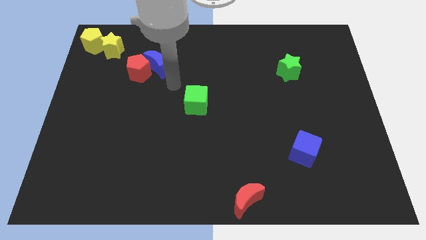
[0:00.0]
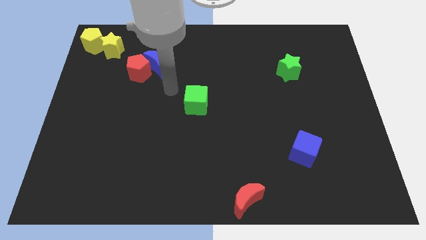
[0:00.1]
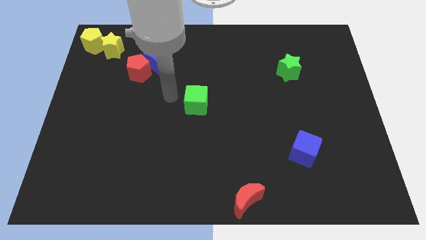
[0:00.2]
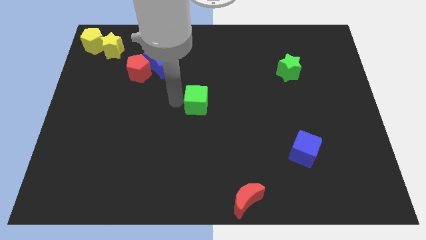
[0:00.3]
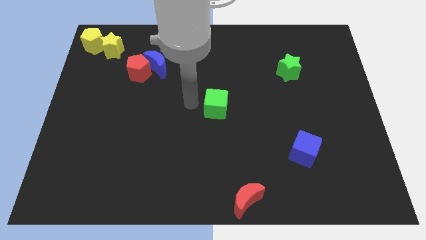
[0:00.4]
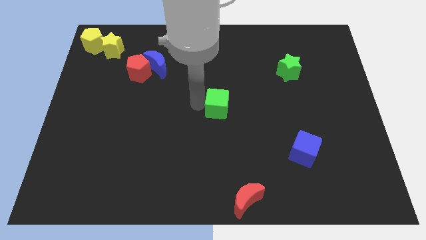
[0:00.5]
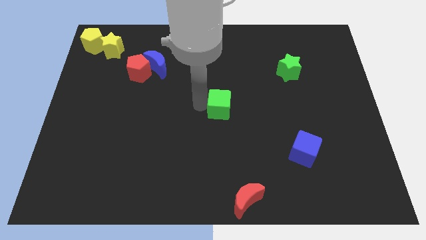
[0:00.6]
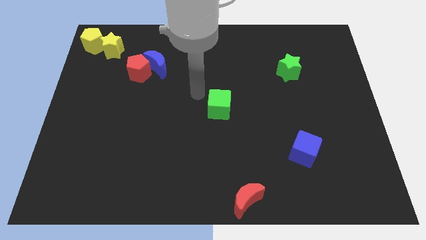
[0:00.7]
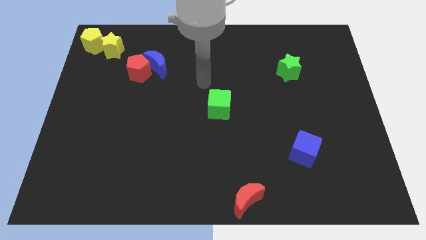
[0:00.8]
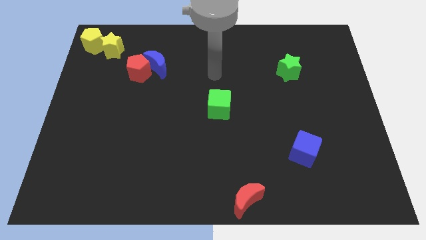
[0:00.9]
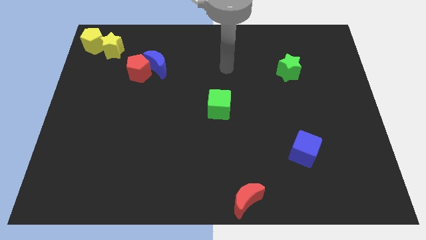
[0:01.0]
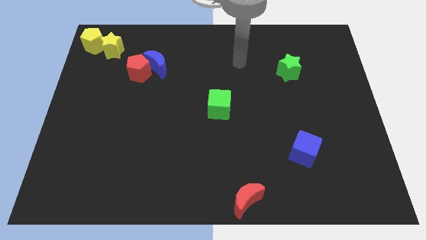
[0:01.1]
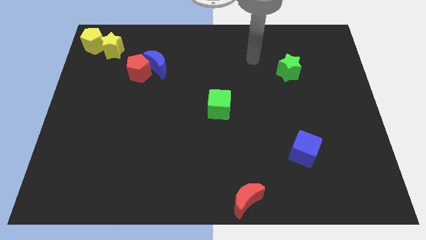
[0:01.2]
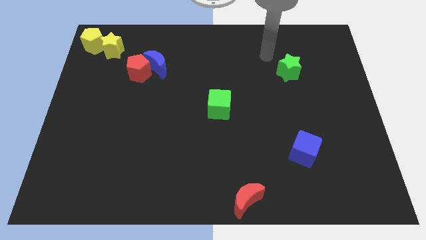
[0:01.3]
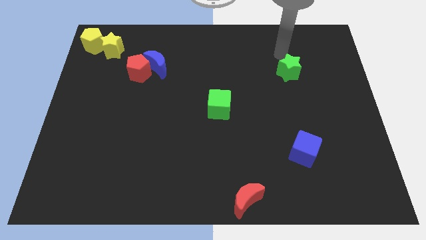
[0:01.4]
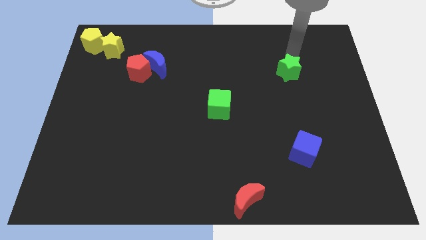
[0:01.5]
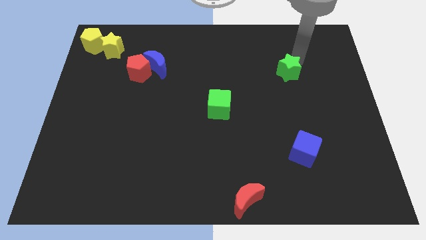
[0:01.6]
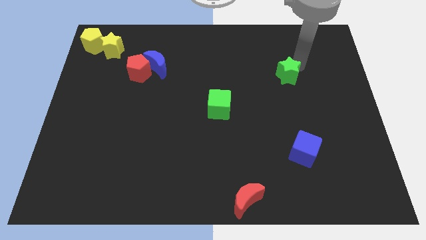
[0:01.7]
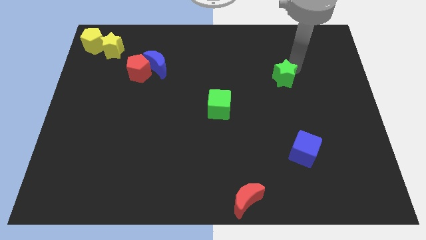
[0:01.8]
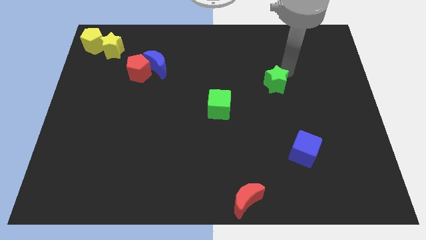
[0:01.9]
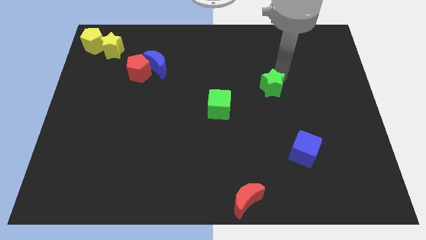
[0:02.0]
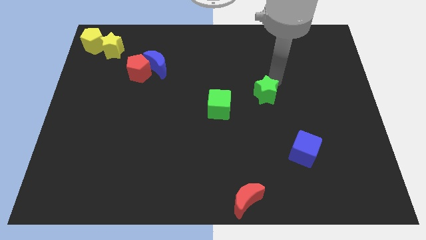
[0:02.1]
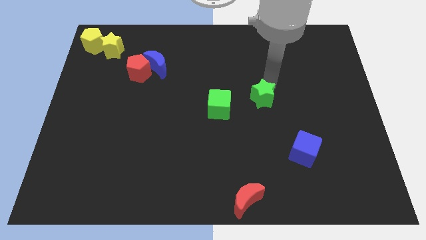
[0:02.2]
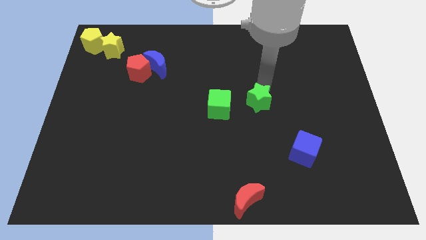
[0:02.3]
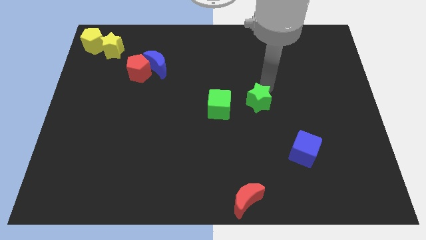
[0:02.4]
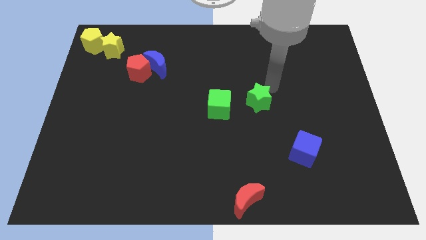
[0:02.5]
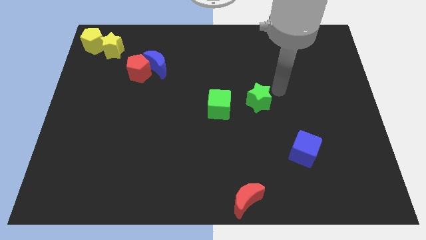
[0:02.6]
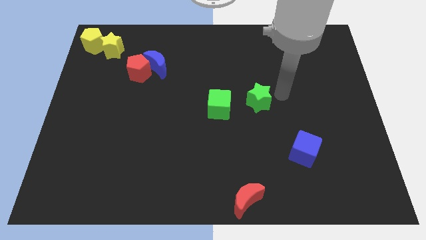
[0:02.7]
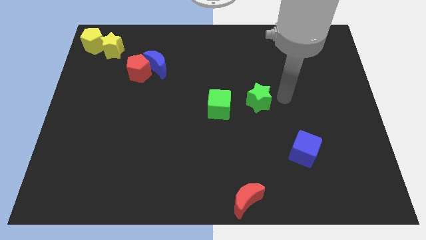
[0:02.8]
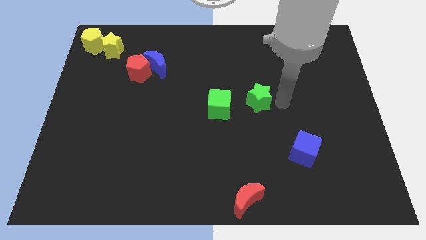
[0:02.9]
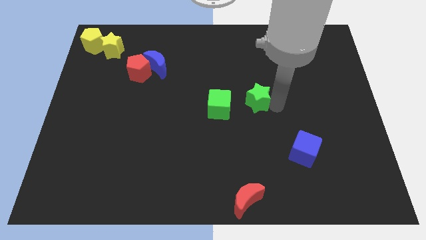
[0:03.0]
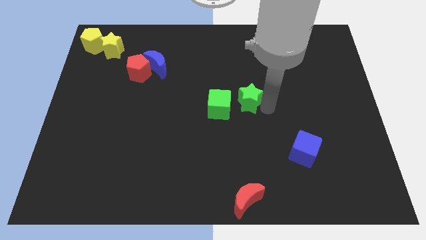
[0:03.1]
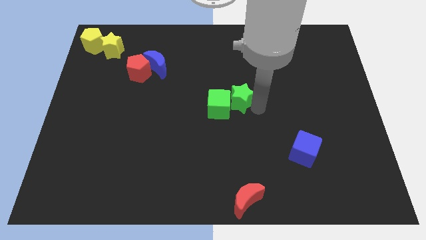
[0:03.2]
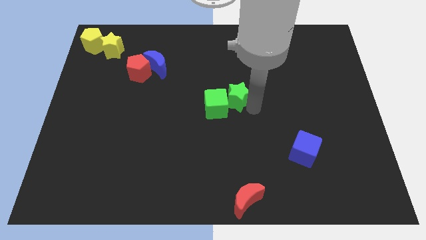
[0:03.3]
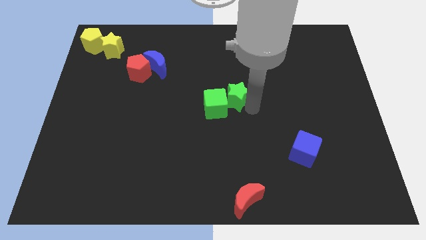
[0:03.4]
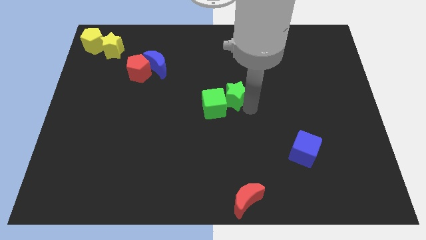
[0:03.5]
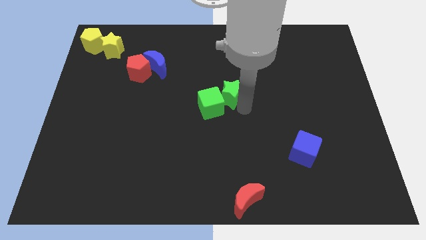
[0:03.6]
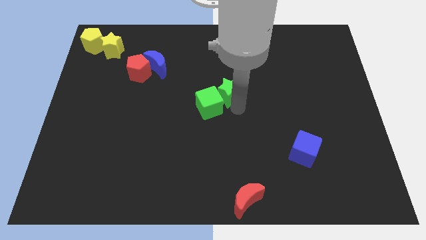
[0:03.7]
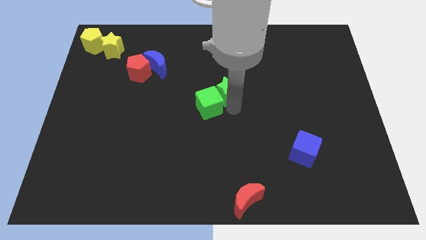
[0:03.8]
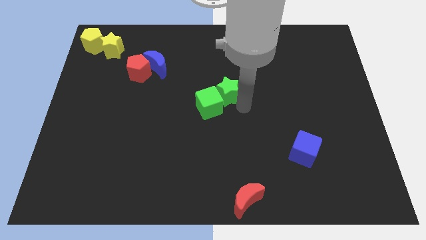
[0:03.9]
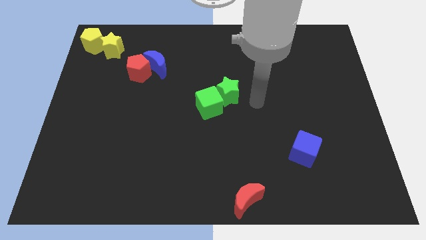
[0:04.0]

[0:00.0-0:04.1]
move green star diagonal to the blue cube

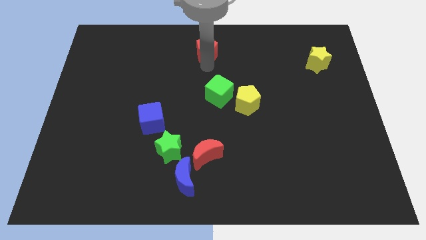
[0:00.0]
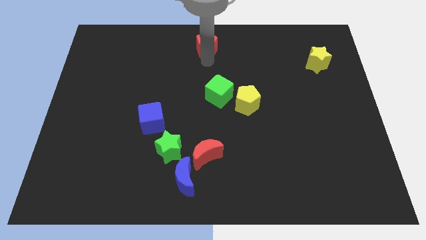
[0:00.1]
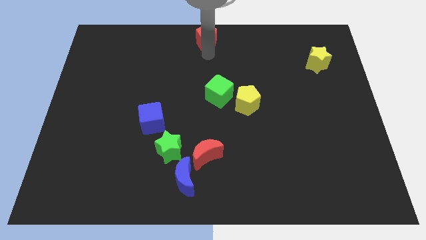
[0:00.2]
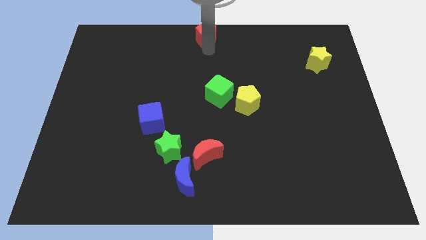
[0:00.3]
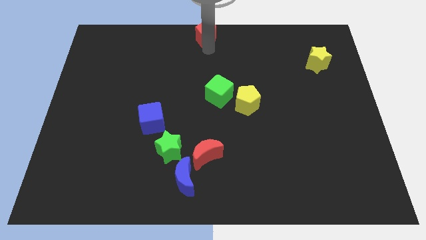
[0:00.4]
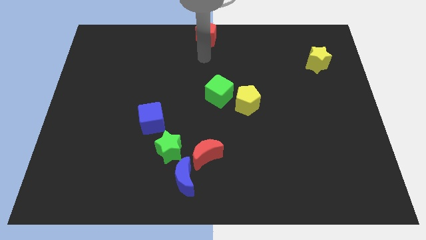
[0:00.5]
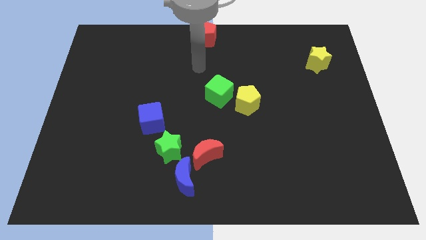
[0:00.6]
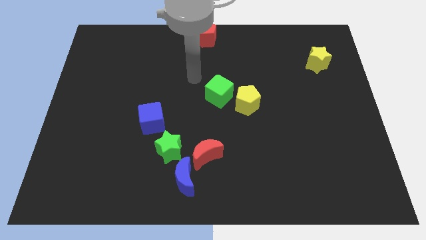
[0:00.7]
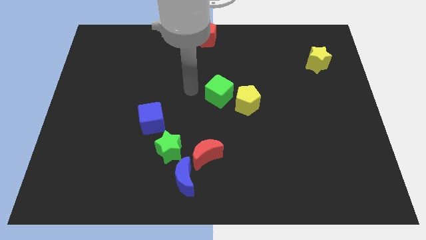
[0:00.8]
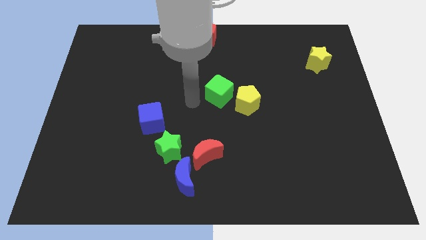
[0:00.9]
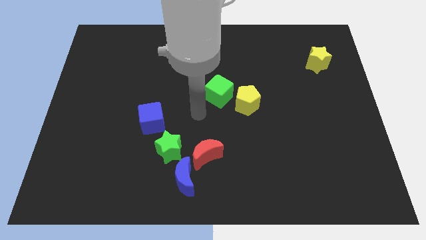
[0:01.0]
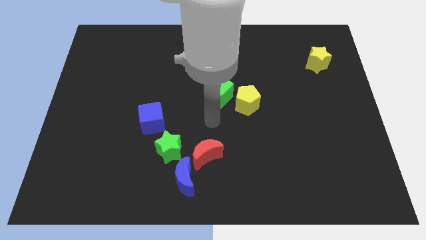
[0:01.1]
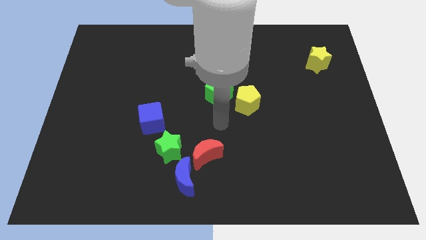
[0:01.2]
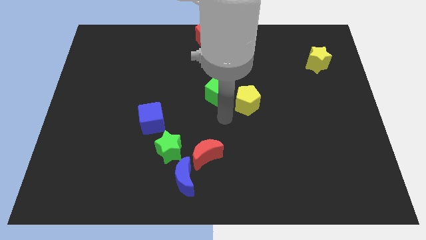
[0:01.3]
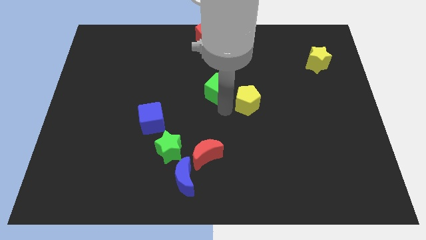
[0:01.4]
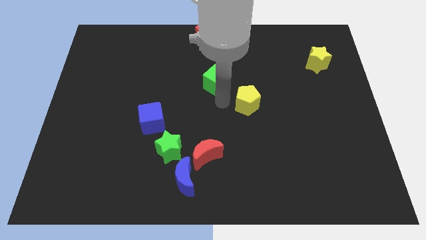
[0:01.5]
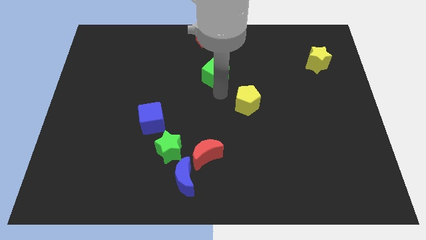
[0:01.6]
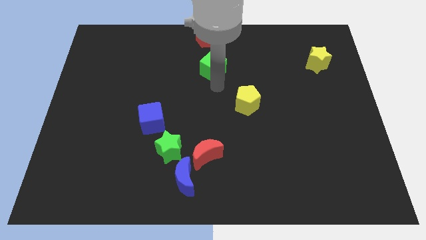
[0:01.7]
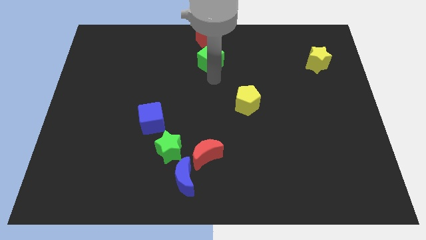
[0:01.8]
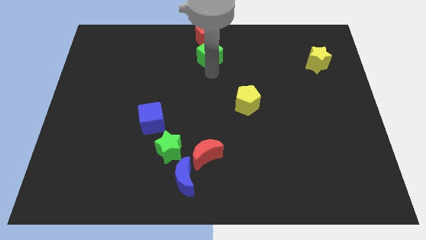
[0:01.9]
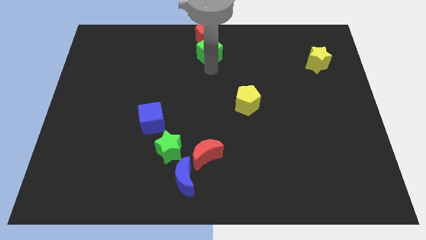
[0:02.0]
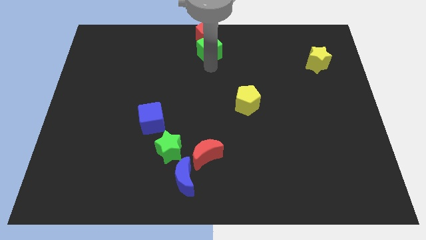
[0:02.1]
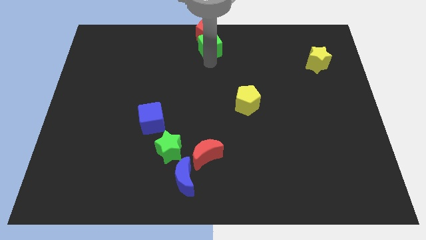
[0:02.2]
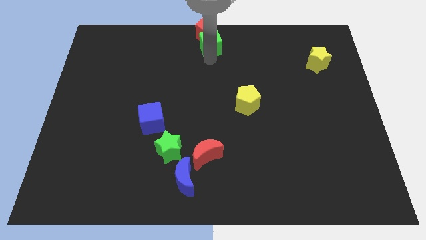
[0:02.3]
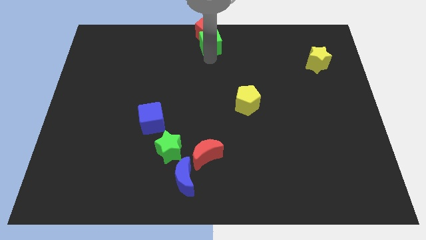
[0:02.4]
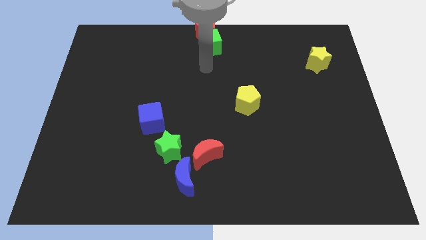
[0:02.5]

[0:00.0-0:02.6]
place red pentagon and green cube to center top

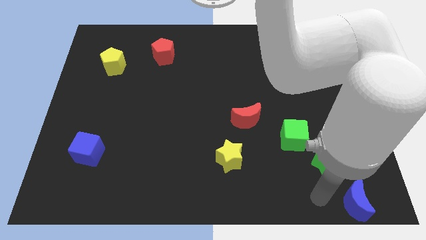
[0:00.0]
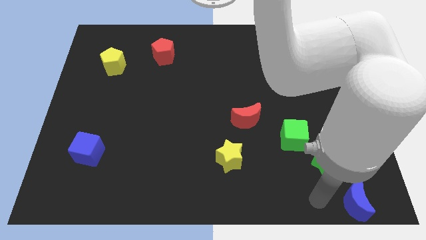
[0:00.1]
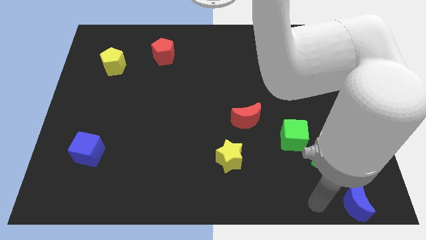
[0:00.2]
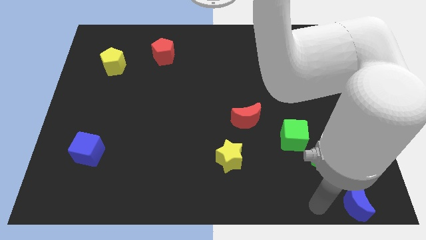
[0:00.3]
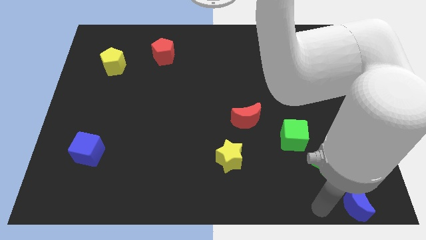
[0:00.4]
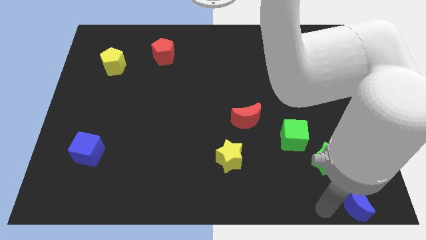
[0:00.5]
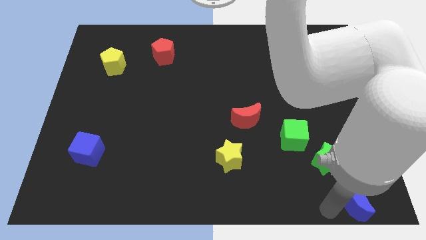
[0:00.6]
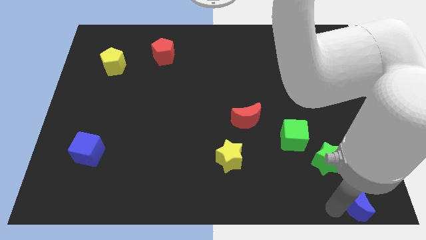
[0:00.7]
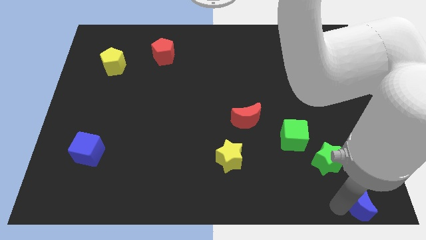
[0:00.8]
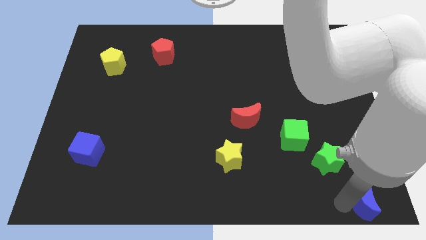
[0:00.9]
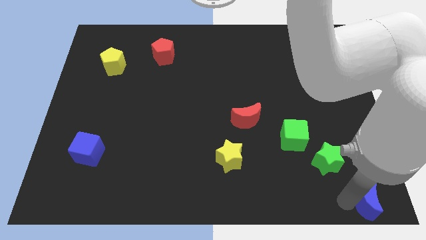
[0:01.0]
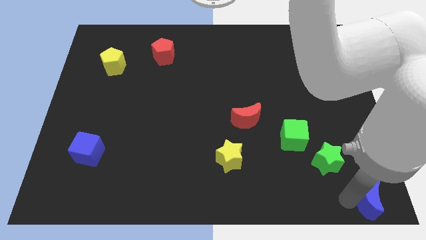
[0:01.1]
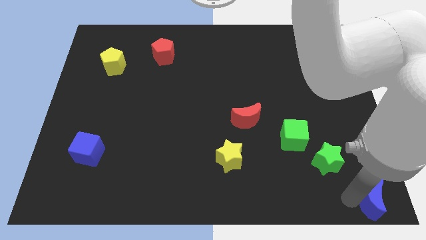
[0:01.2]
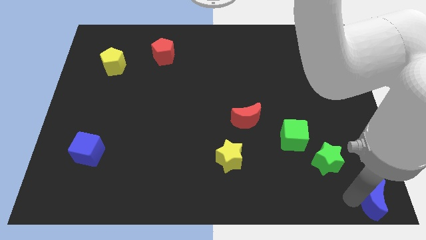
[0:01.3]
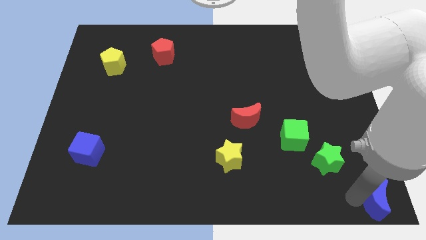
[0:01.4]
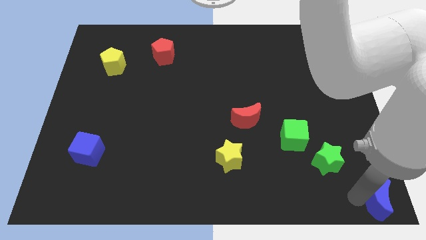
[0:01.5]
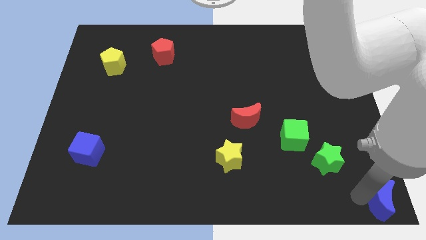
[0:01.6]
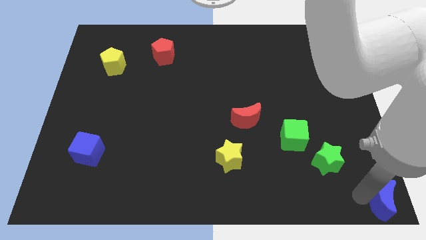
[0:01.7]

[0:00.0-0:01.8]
place the blue crescent at the bottom right corner of the board

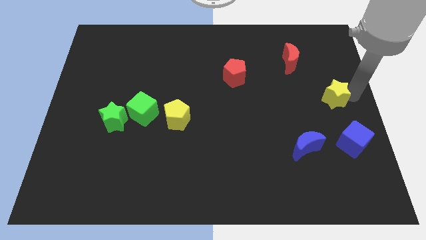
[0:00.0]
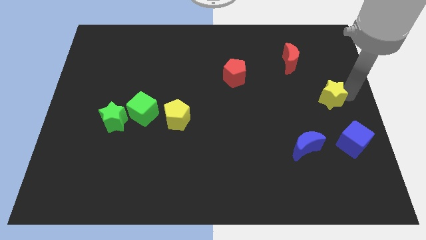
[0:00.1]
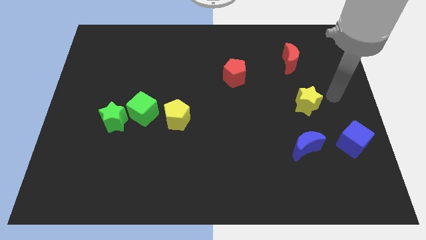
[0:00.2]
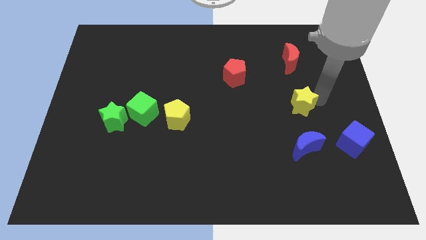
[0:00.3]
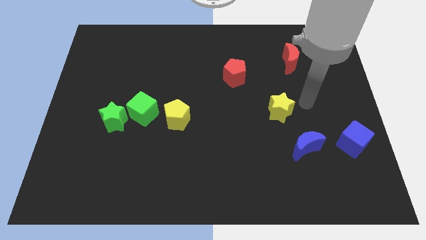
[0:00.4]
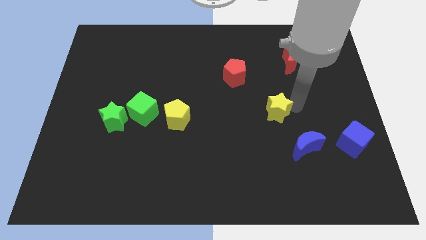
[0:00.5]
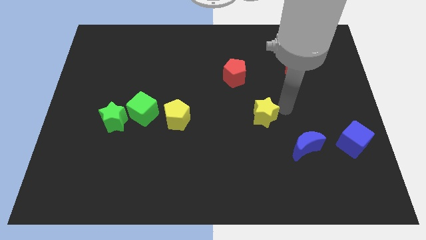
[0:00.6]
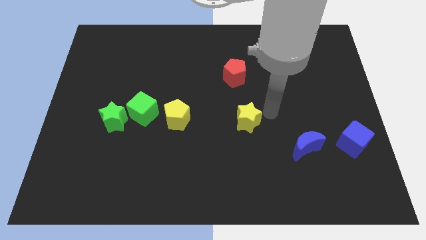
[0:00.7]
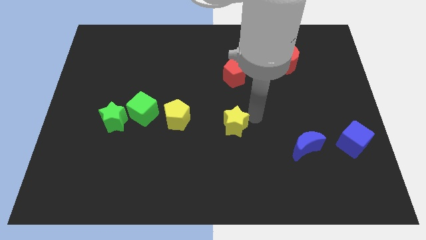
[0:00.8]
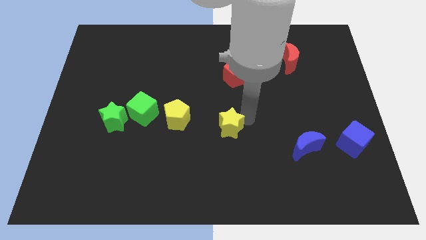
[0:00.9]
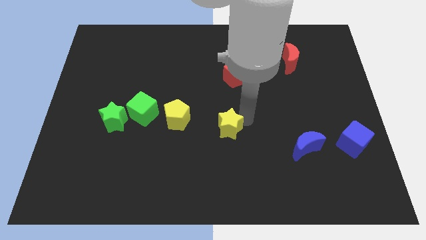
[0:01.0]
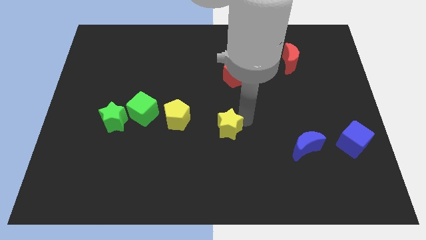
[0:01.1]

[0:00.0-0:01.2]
push yellow star towards yellow pentagon
